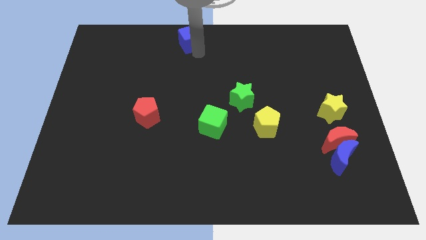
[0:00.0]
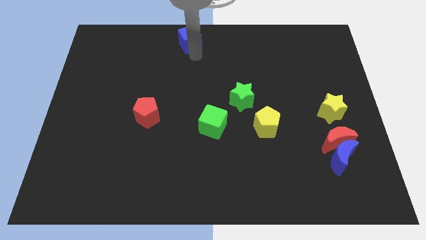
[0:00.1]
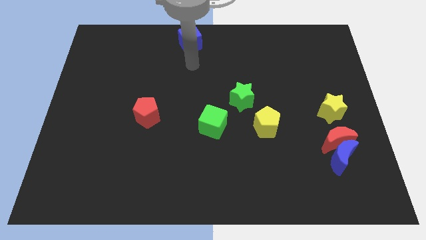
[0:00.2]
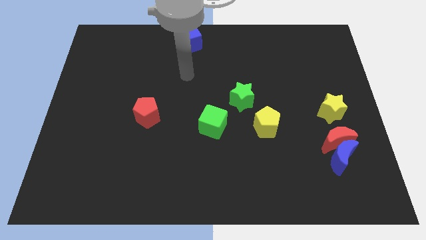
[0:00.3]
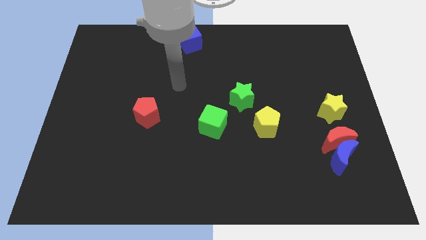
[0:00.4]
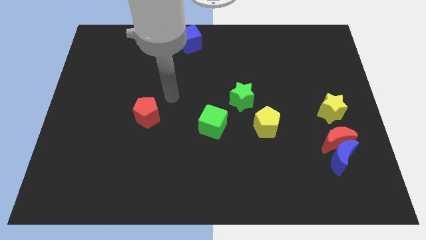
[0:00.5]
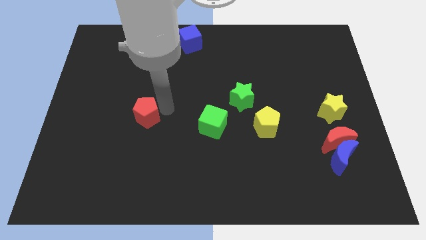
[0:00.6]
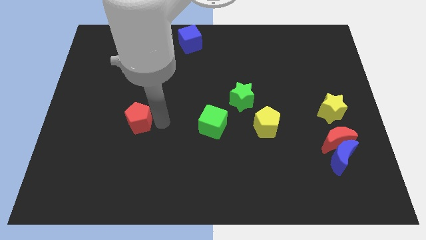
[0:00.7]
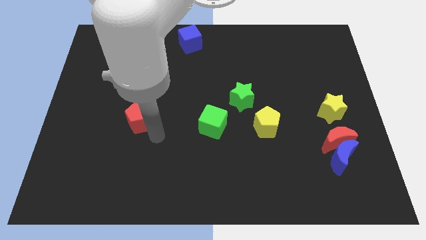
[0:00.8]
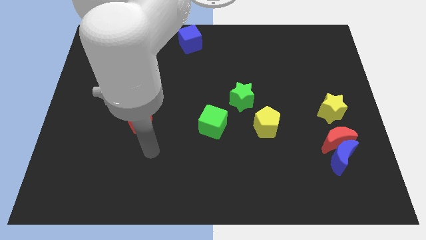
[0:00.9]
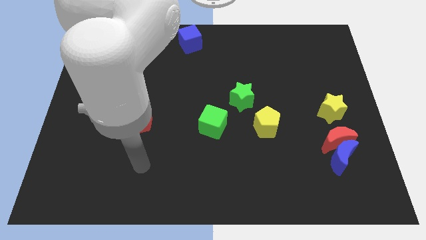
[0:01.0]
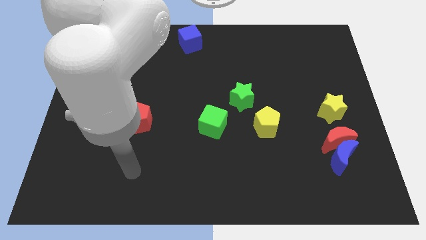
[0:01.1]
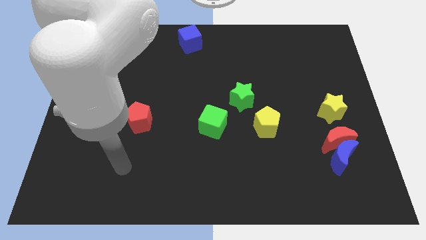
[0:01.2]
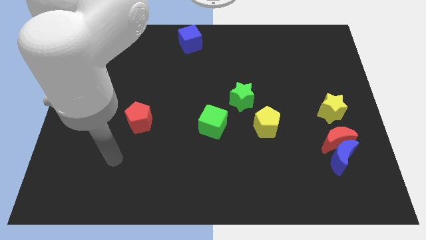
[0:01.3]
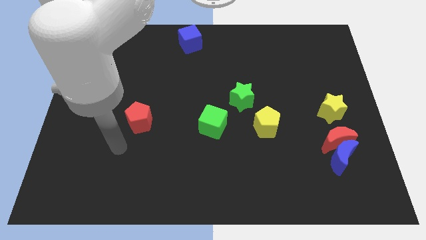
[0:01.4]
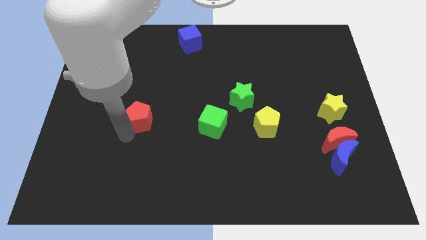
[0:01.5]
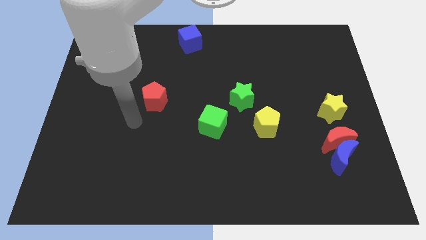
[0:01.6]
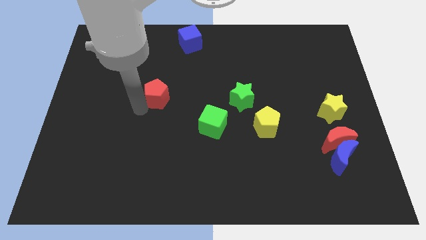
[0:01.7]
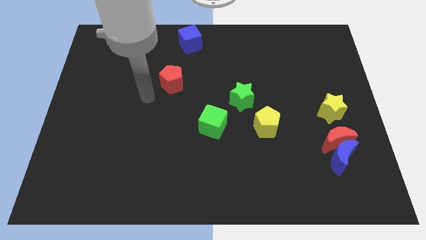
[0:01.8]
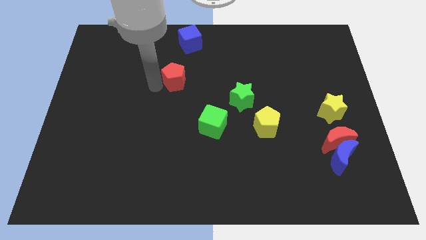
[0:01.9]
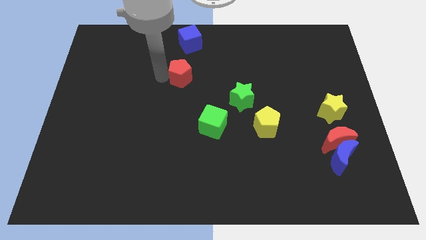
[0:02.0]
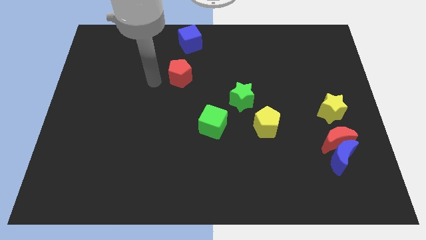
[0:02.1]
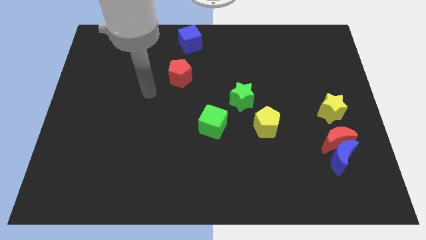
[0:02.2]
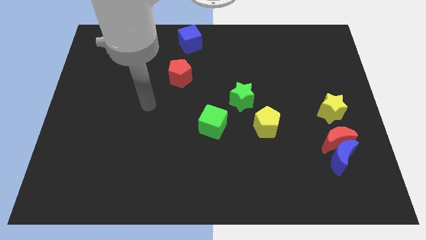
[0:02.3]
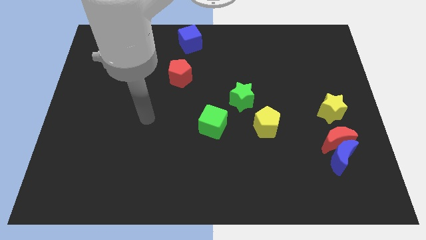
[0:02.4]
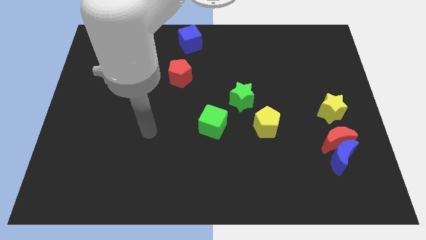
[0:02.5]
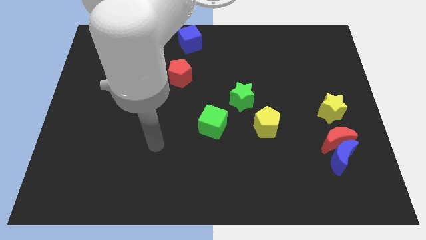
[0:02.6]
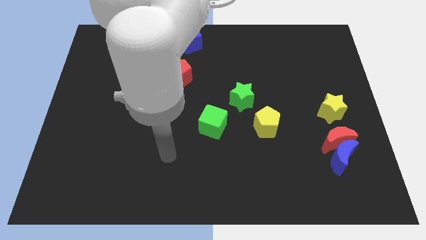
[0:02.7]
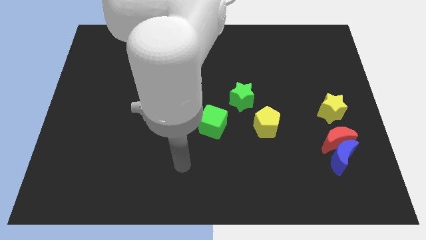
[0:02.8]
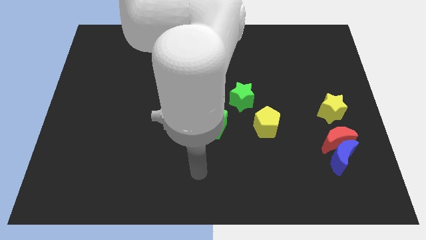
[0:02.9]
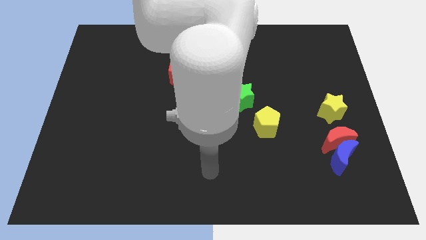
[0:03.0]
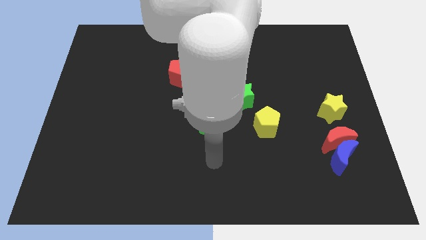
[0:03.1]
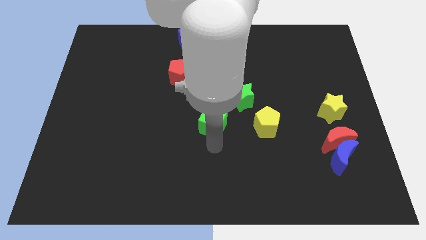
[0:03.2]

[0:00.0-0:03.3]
move the red crescent to the parallel bottom of the blue cube

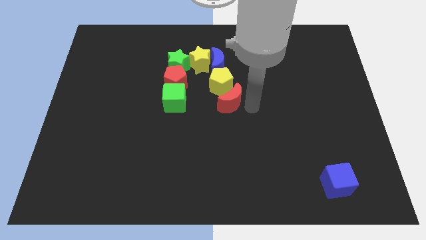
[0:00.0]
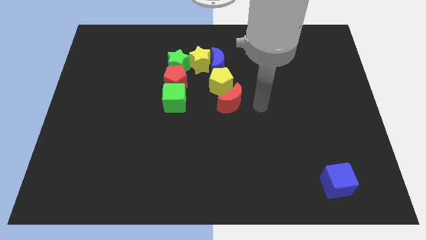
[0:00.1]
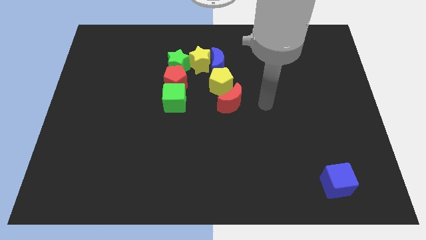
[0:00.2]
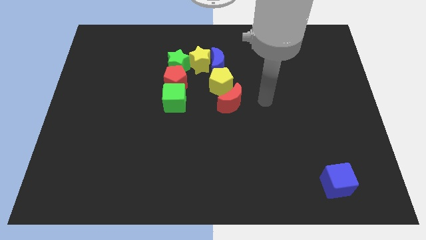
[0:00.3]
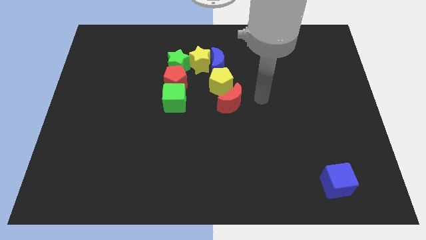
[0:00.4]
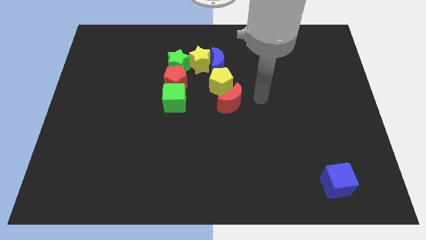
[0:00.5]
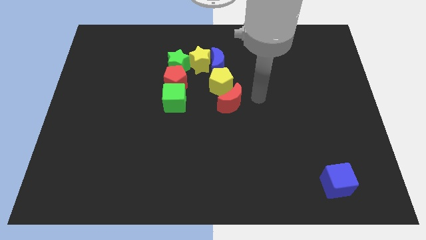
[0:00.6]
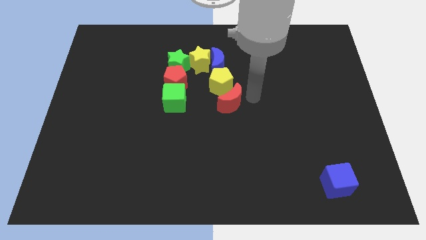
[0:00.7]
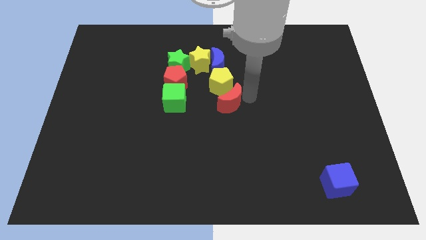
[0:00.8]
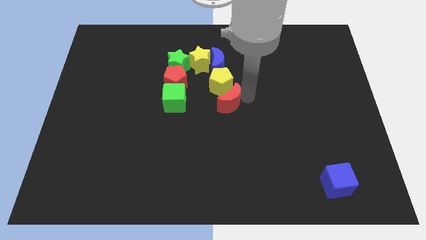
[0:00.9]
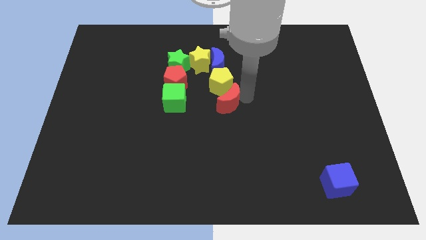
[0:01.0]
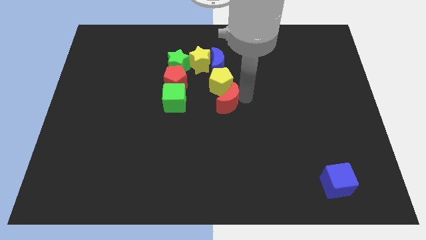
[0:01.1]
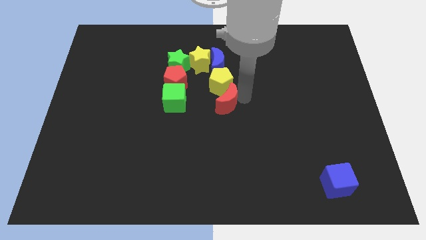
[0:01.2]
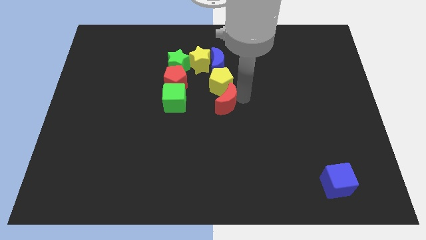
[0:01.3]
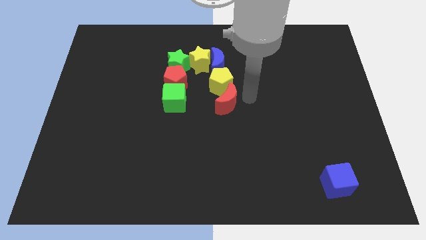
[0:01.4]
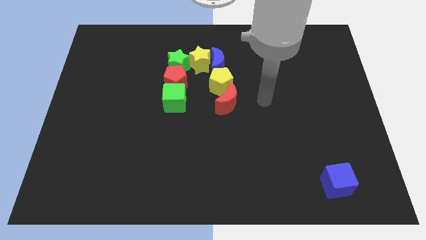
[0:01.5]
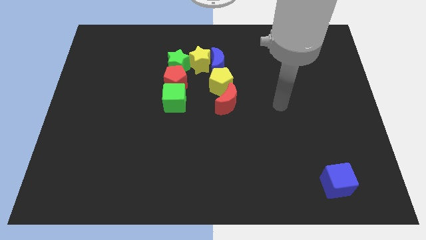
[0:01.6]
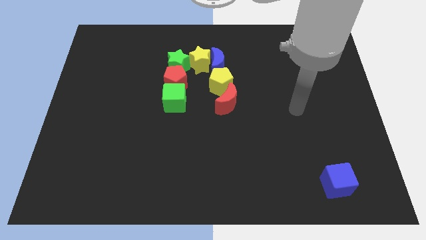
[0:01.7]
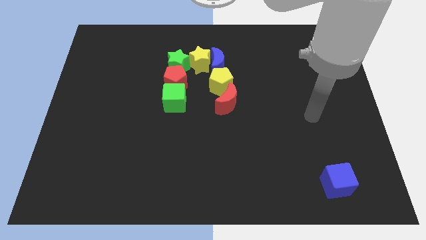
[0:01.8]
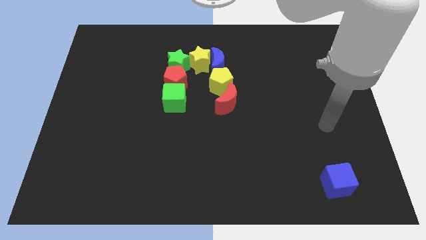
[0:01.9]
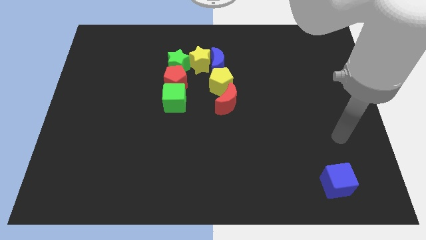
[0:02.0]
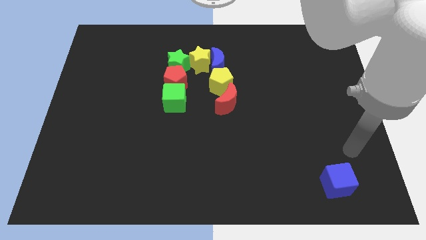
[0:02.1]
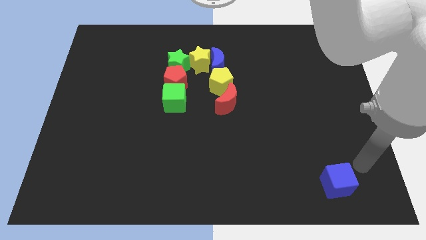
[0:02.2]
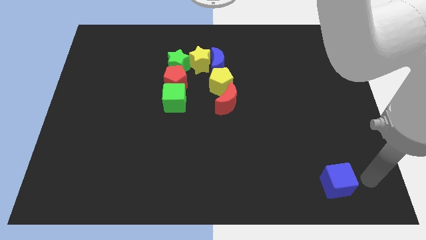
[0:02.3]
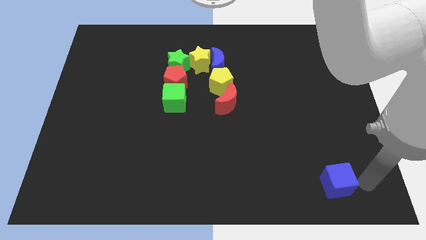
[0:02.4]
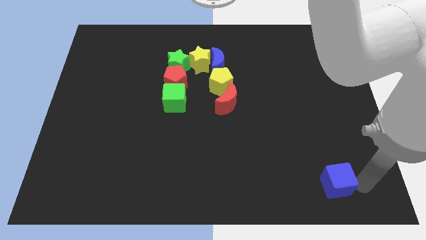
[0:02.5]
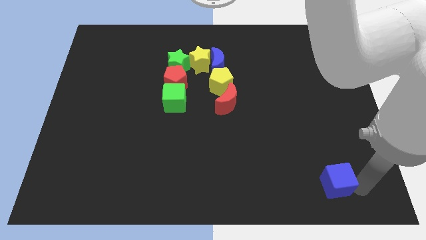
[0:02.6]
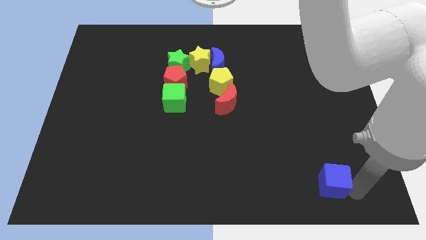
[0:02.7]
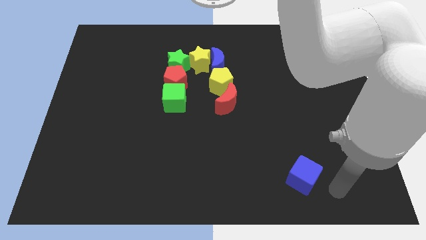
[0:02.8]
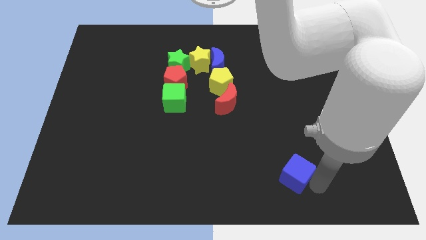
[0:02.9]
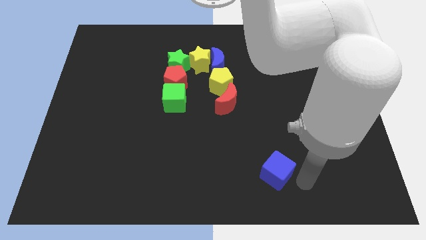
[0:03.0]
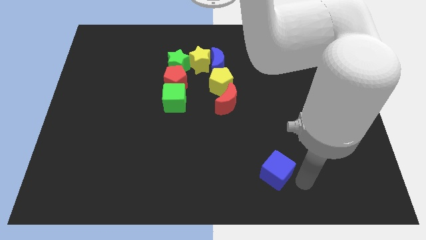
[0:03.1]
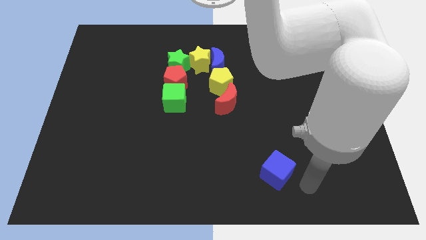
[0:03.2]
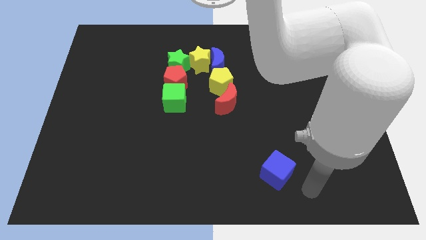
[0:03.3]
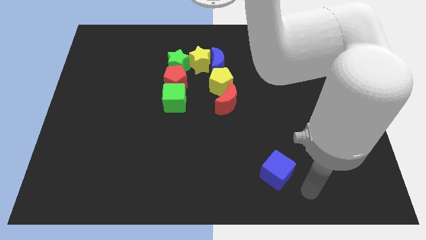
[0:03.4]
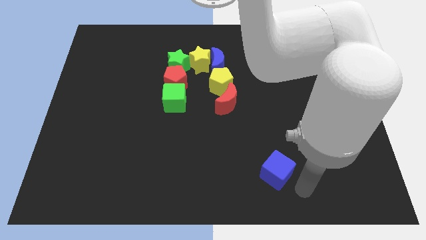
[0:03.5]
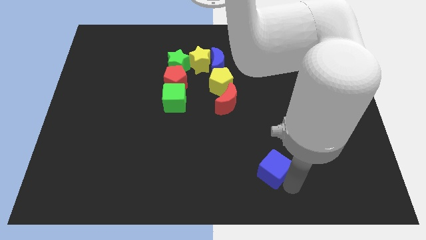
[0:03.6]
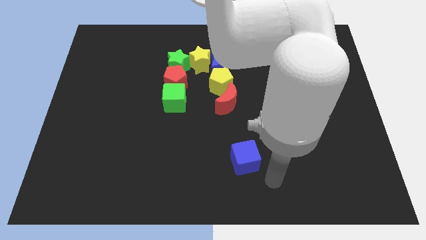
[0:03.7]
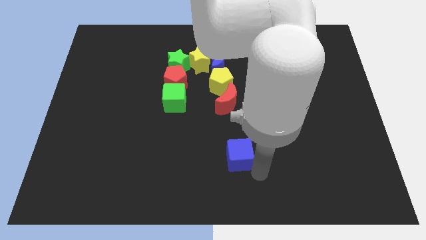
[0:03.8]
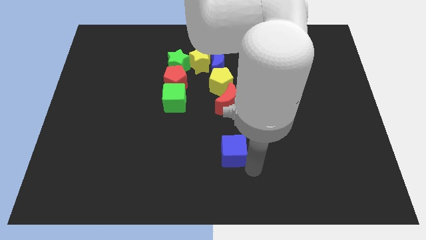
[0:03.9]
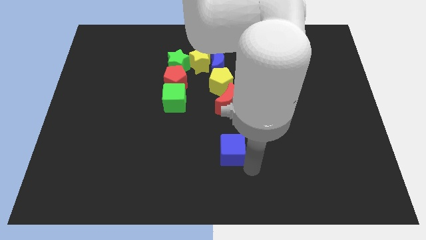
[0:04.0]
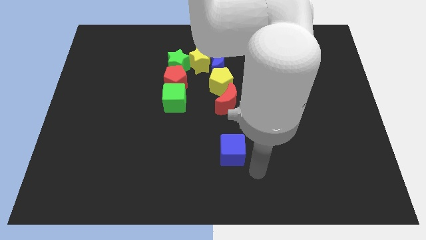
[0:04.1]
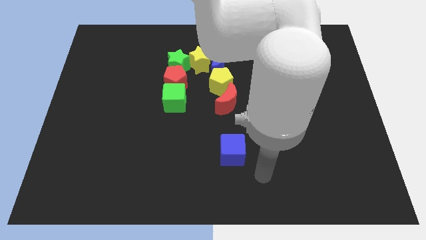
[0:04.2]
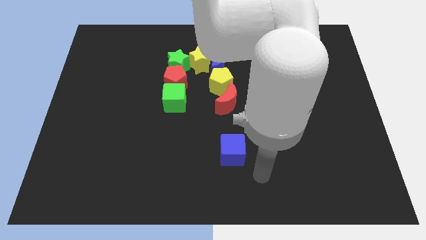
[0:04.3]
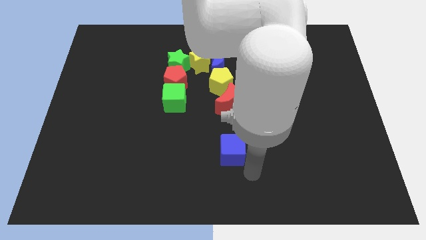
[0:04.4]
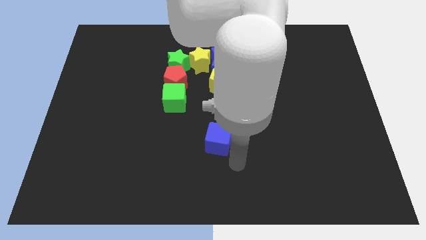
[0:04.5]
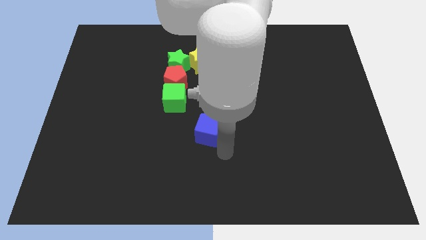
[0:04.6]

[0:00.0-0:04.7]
move the blue cube to the center of the board

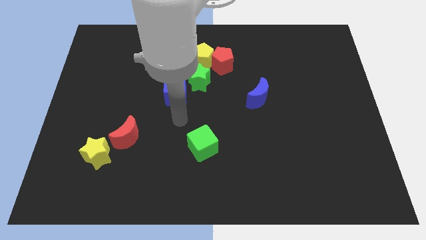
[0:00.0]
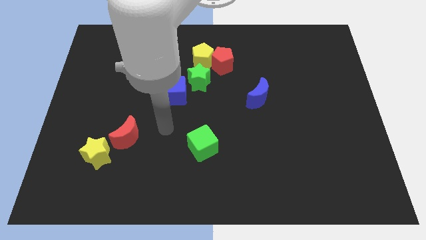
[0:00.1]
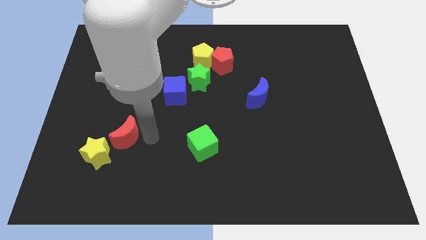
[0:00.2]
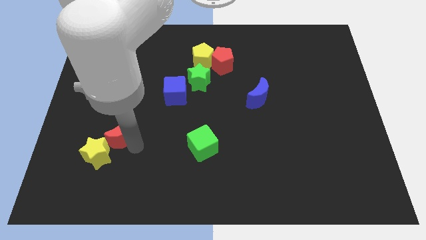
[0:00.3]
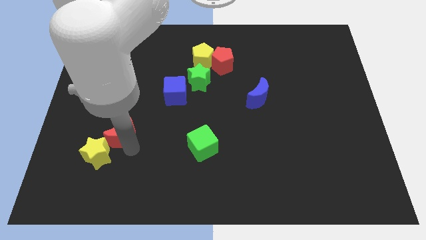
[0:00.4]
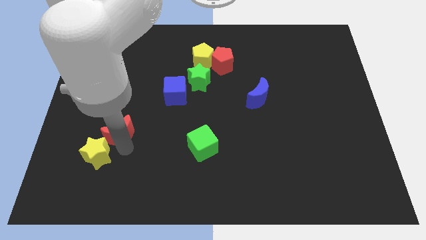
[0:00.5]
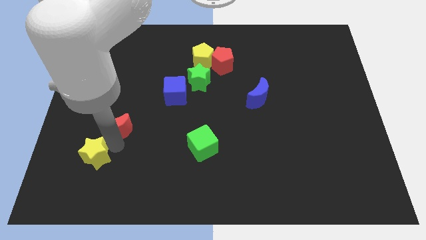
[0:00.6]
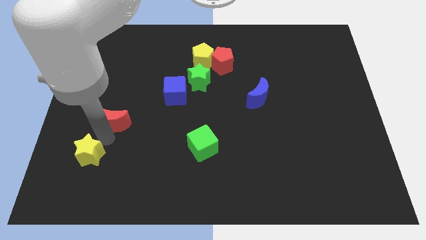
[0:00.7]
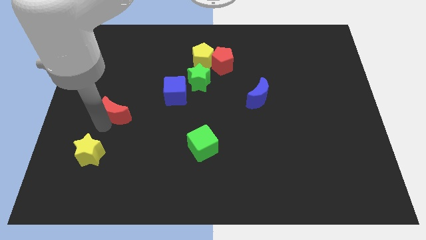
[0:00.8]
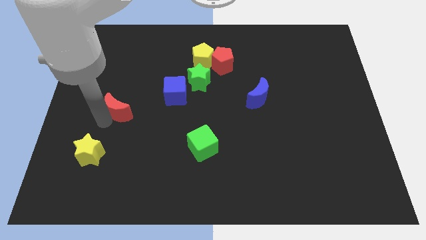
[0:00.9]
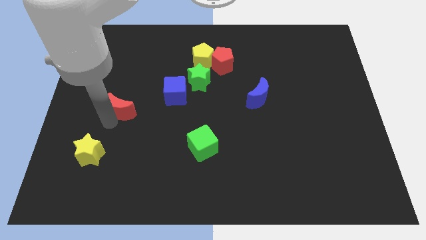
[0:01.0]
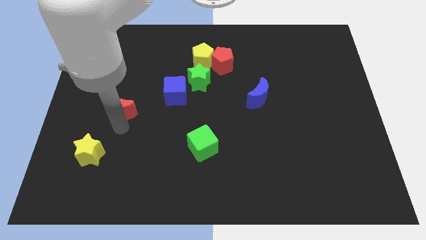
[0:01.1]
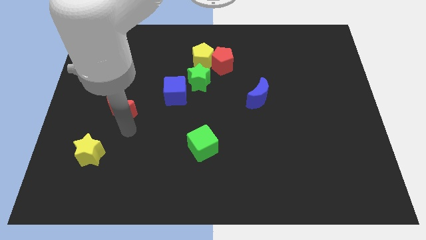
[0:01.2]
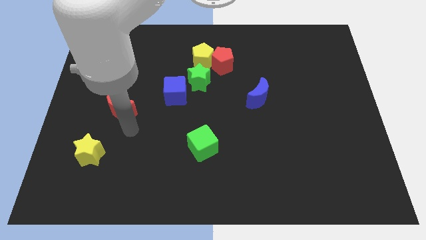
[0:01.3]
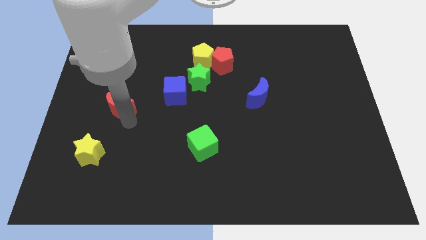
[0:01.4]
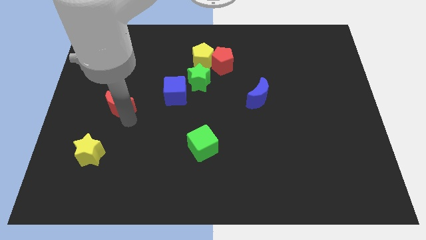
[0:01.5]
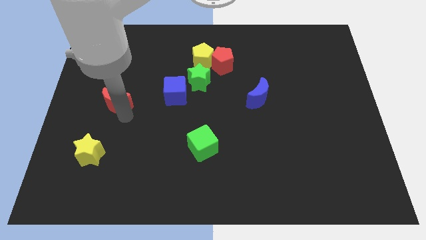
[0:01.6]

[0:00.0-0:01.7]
separate the red crescent and the yellow star
